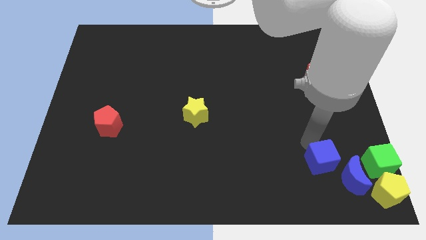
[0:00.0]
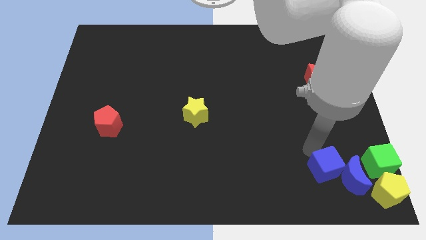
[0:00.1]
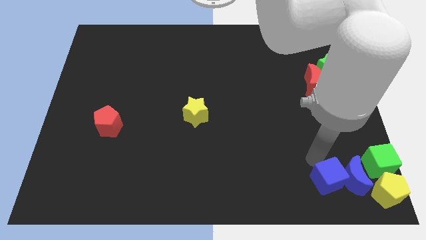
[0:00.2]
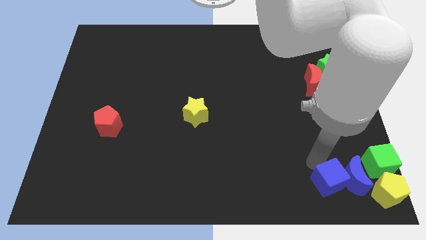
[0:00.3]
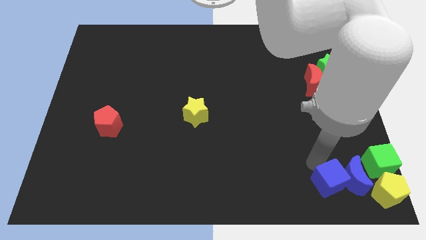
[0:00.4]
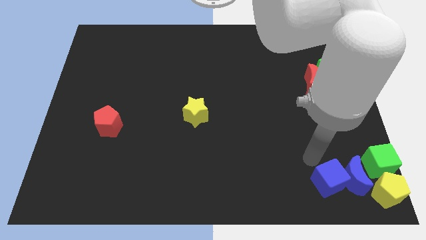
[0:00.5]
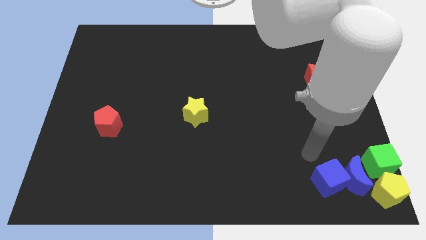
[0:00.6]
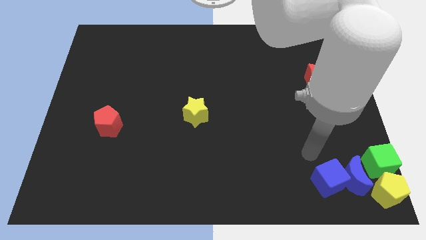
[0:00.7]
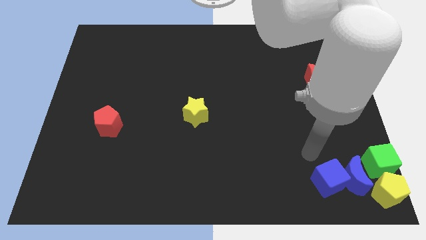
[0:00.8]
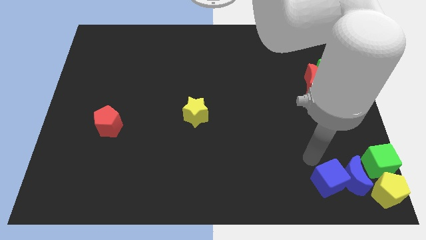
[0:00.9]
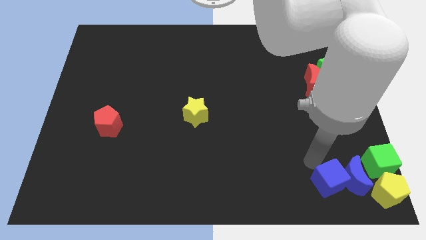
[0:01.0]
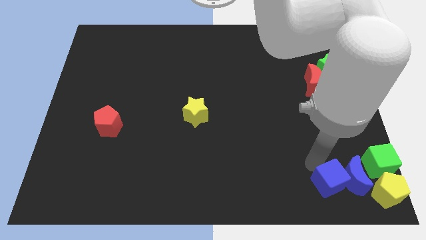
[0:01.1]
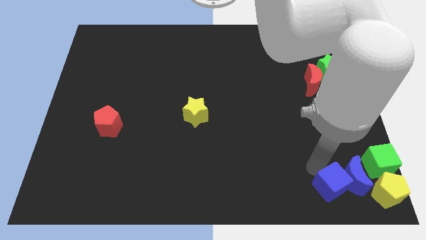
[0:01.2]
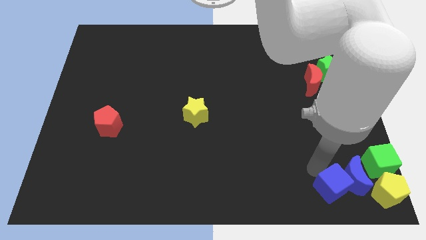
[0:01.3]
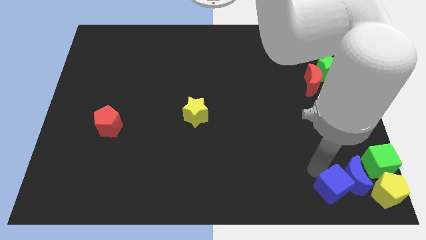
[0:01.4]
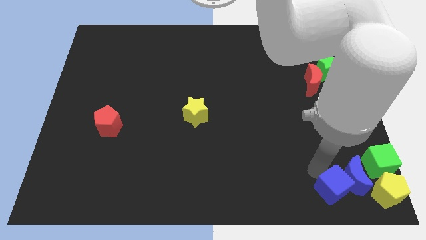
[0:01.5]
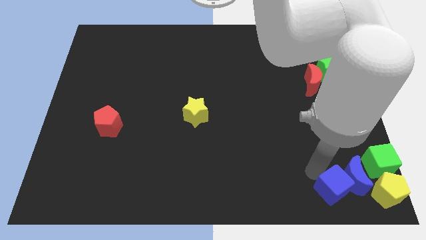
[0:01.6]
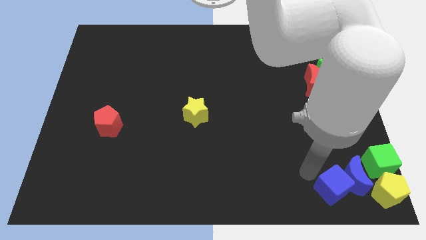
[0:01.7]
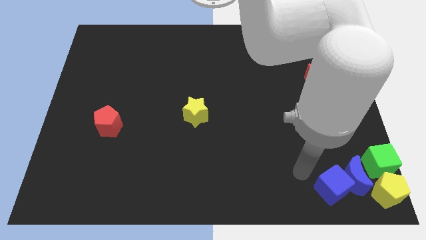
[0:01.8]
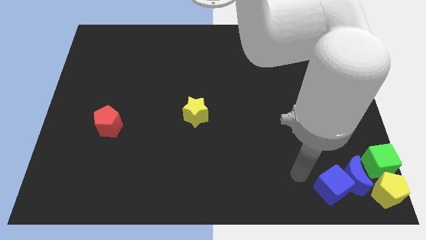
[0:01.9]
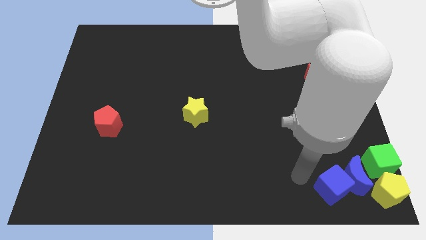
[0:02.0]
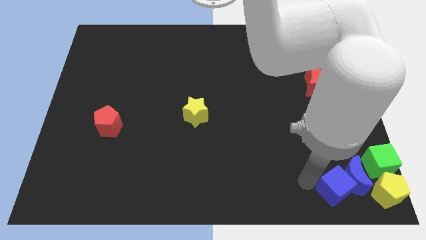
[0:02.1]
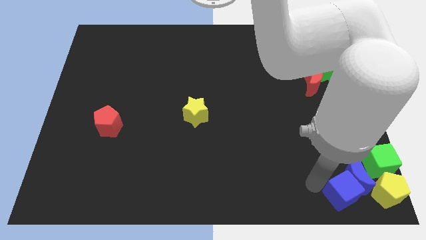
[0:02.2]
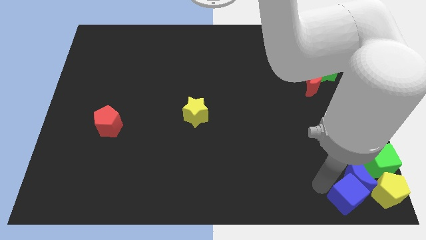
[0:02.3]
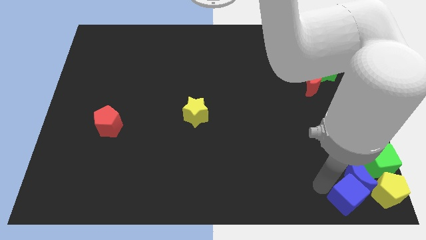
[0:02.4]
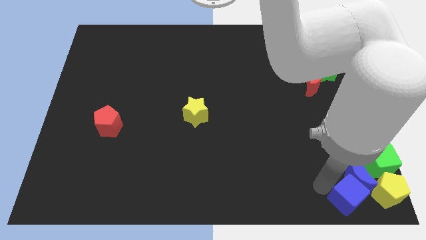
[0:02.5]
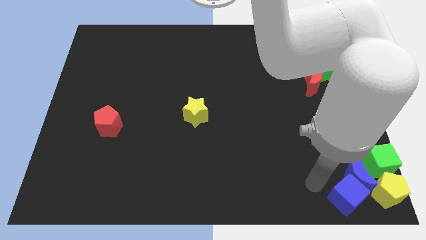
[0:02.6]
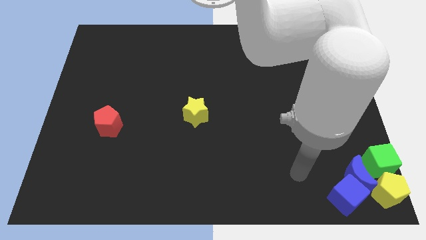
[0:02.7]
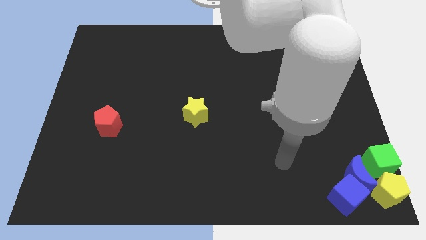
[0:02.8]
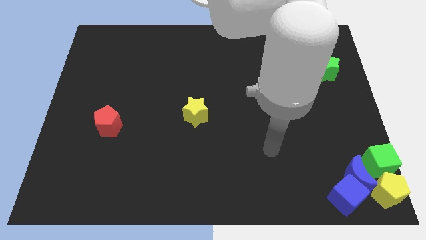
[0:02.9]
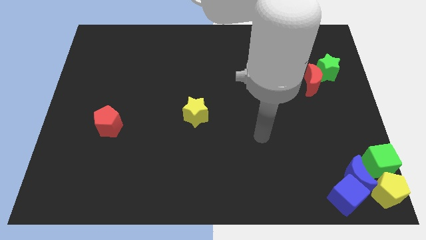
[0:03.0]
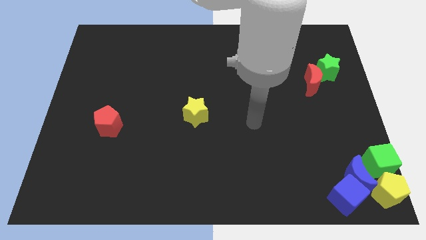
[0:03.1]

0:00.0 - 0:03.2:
slide the blue cube to the bottom left side of the blue moon

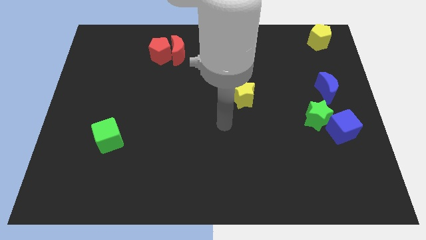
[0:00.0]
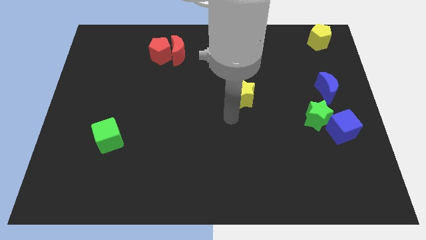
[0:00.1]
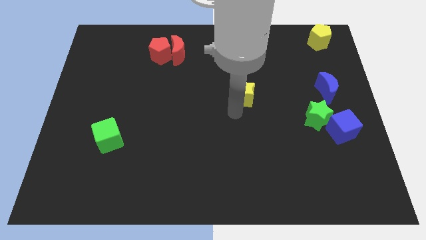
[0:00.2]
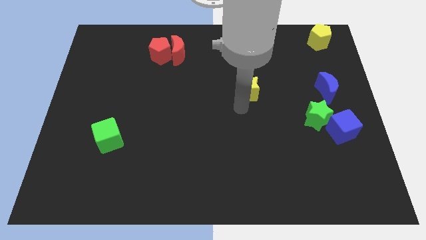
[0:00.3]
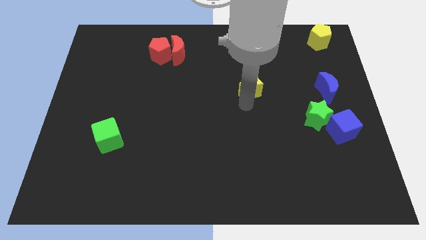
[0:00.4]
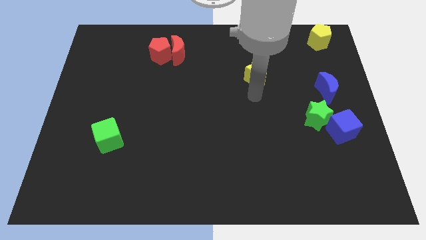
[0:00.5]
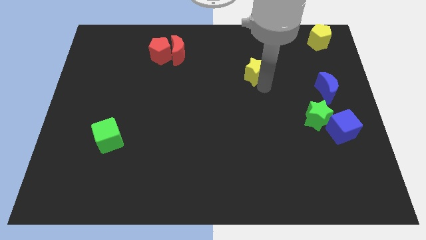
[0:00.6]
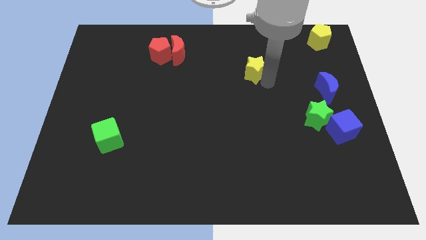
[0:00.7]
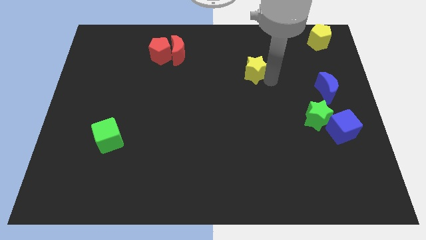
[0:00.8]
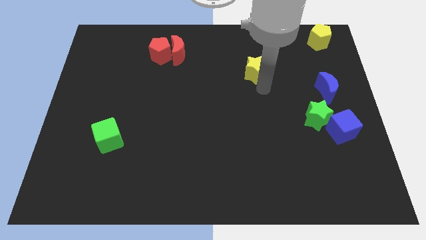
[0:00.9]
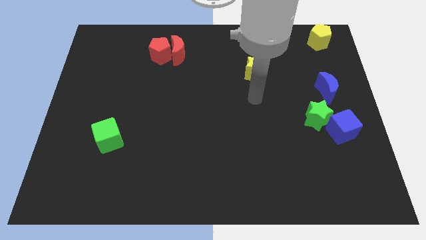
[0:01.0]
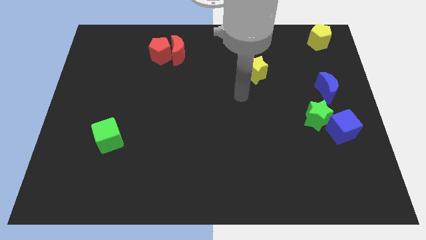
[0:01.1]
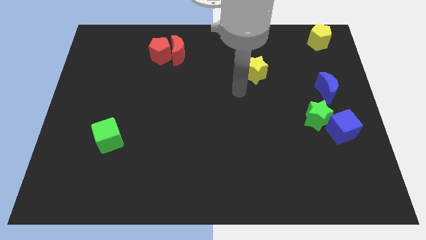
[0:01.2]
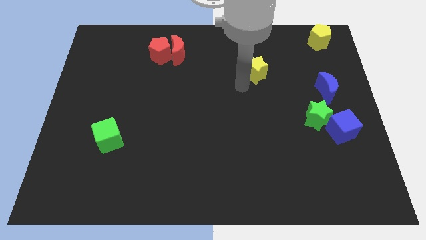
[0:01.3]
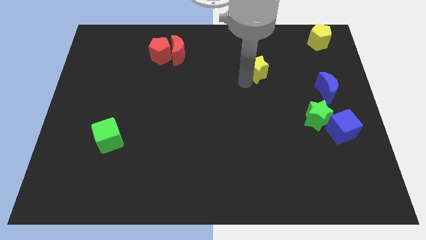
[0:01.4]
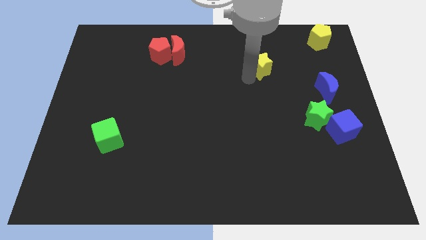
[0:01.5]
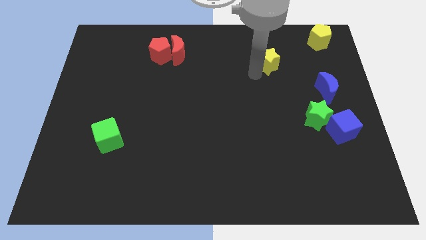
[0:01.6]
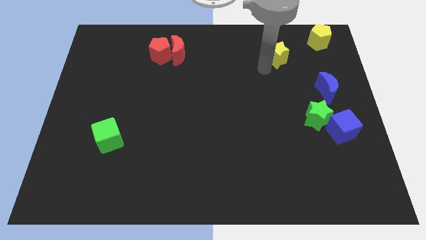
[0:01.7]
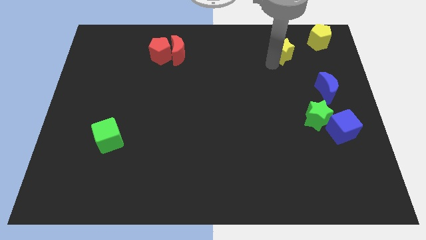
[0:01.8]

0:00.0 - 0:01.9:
place the yellow star to left of the yellow pentagon

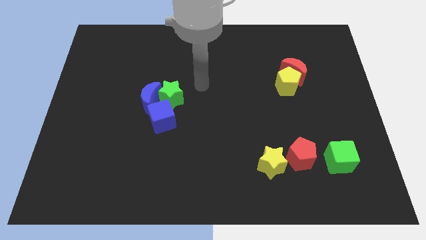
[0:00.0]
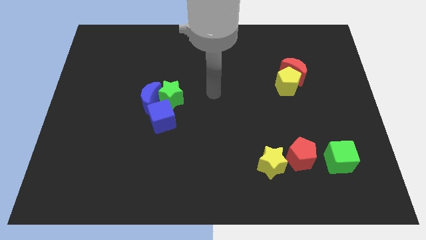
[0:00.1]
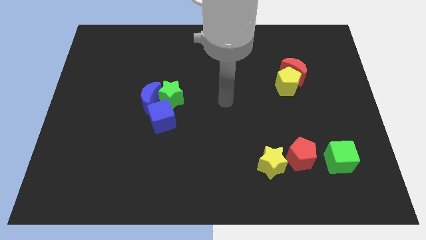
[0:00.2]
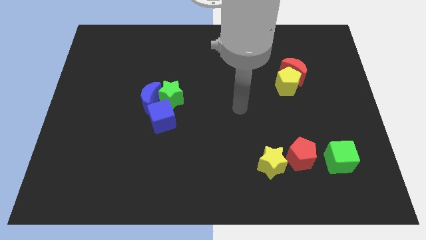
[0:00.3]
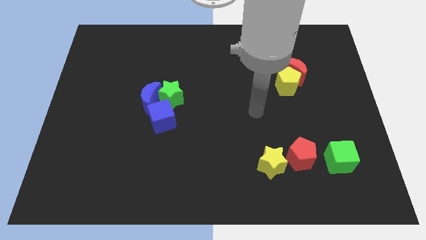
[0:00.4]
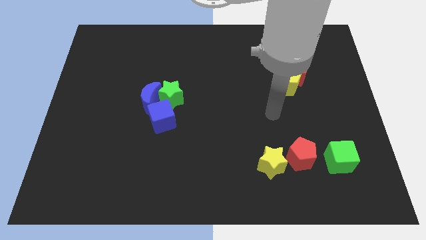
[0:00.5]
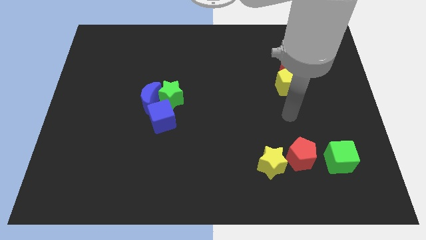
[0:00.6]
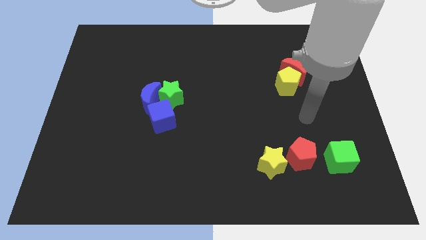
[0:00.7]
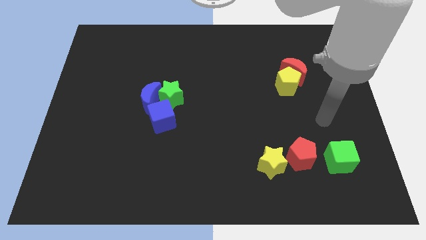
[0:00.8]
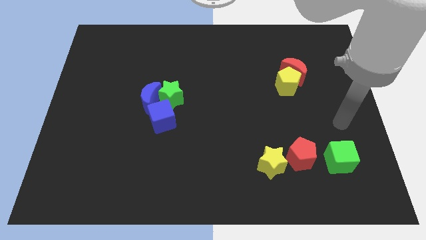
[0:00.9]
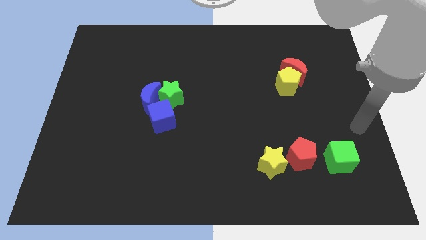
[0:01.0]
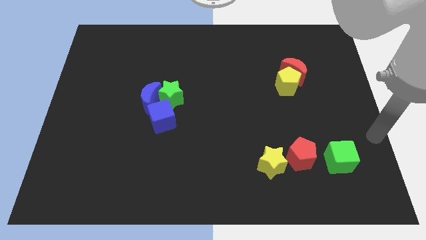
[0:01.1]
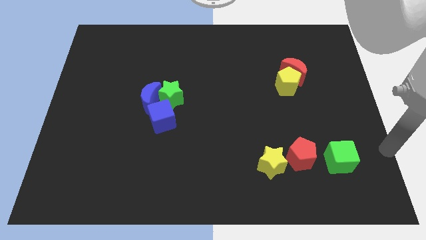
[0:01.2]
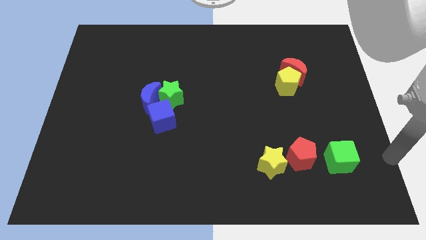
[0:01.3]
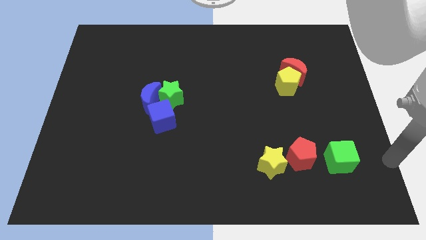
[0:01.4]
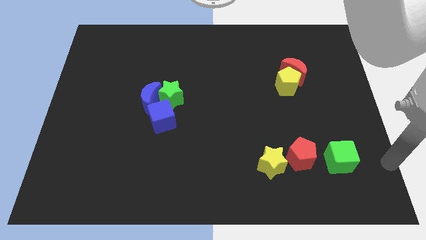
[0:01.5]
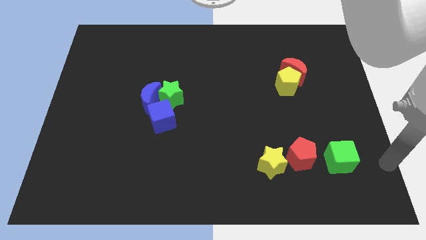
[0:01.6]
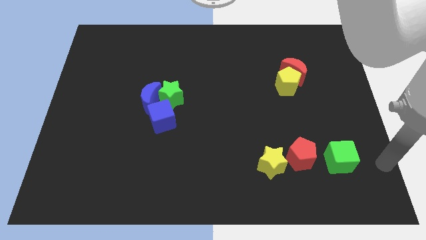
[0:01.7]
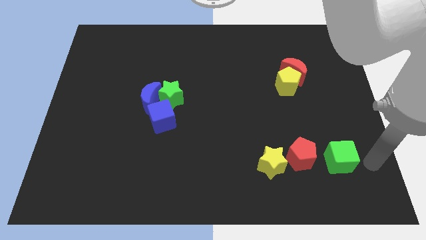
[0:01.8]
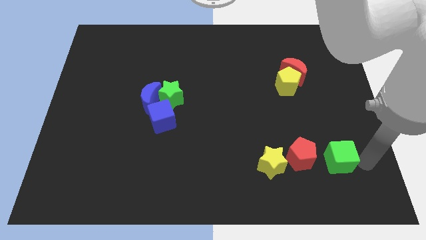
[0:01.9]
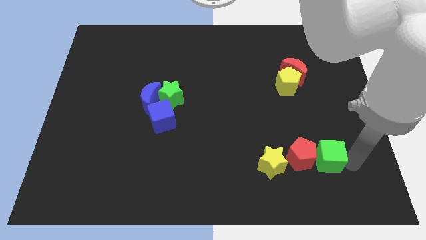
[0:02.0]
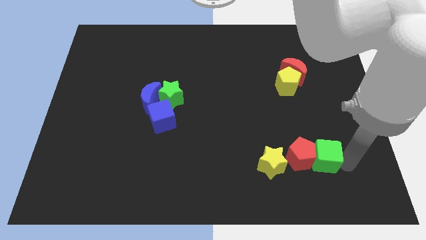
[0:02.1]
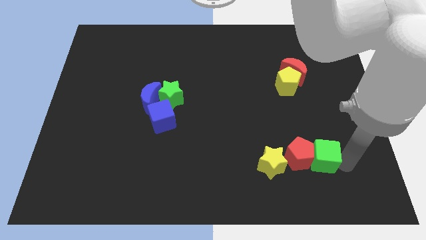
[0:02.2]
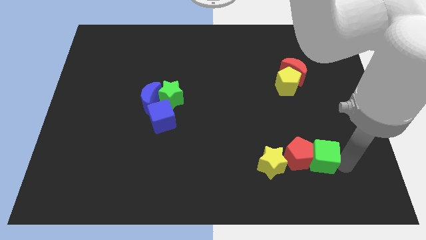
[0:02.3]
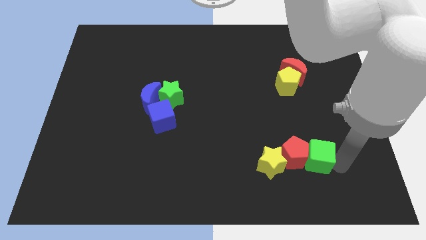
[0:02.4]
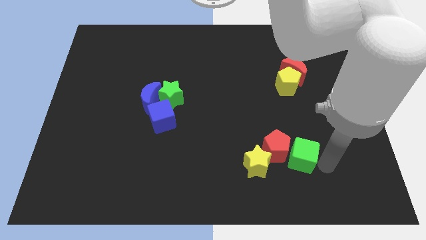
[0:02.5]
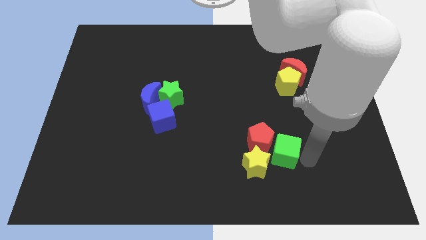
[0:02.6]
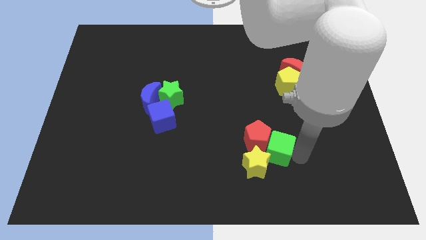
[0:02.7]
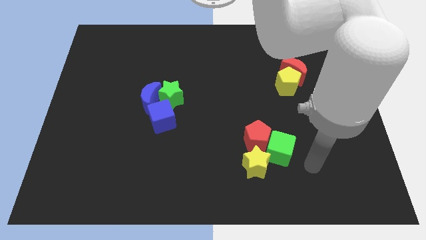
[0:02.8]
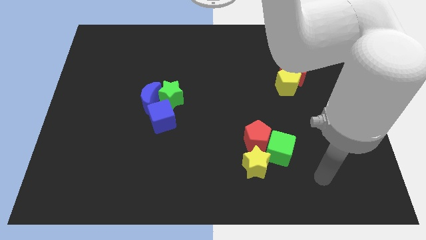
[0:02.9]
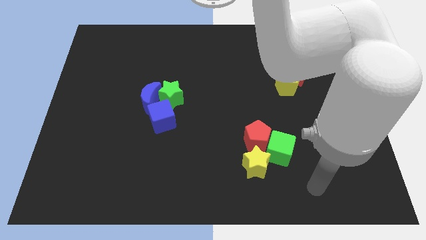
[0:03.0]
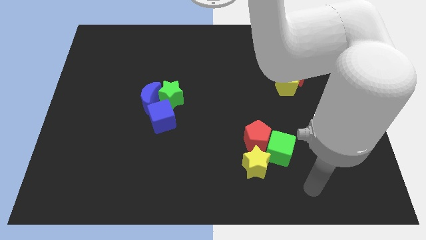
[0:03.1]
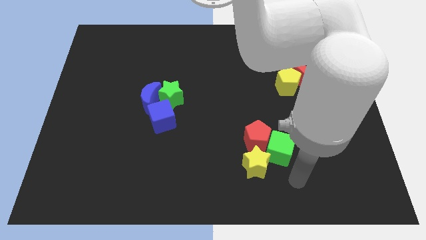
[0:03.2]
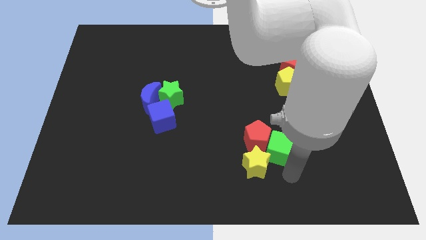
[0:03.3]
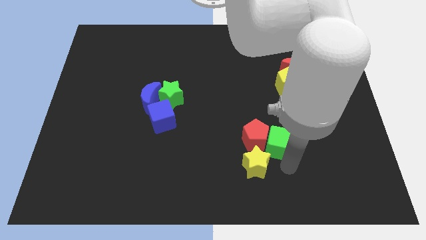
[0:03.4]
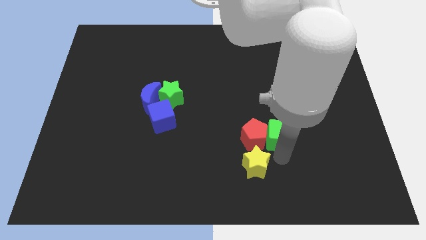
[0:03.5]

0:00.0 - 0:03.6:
slide the red pentagon and the green cube slightly to the left
